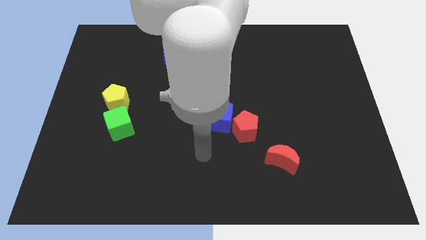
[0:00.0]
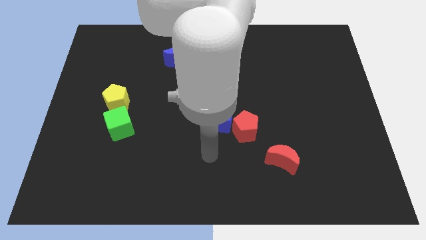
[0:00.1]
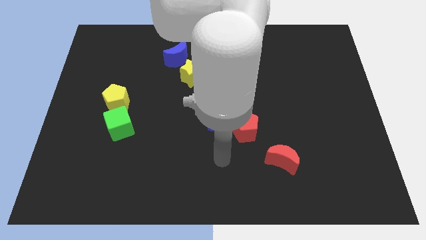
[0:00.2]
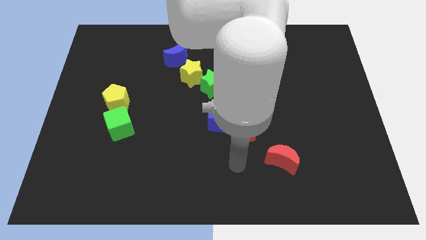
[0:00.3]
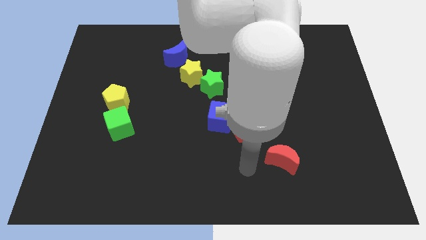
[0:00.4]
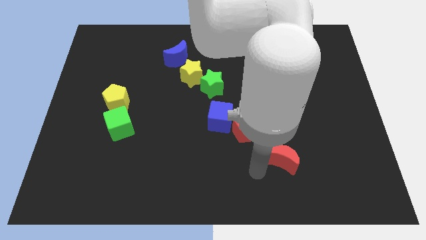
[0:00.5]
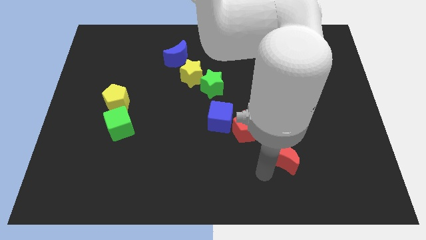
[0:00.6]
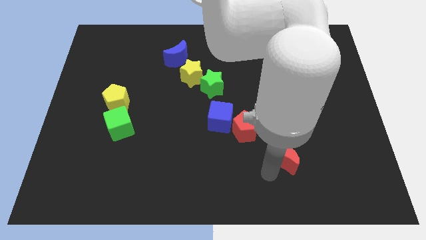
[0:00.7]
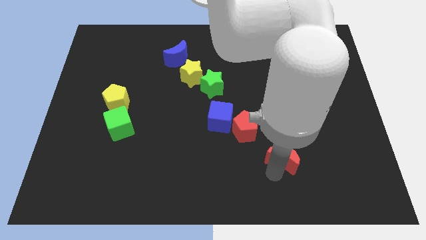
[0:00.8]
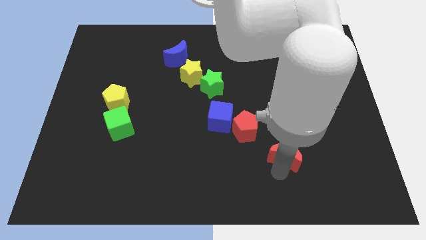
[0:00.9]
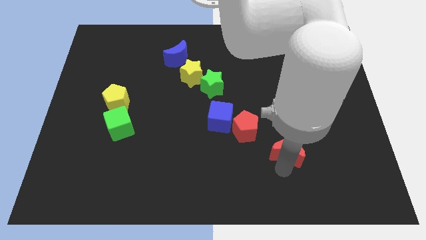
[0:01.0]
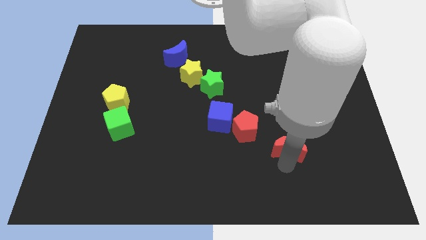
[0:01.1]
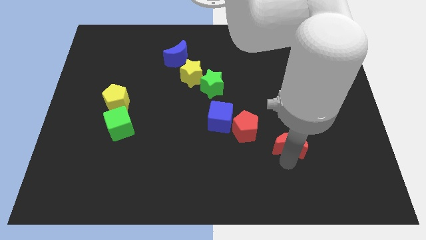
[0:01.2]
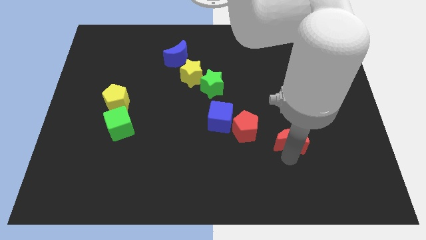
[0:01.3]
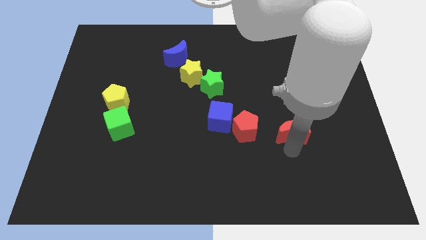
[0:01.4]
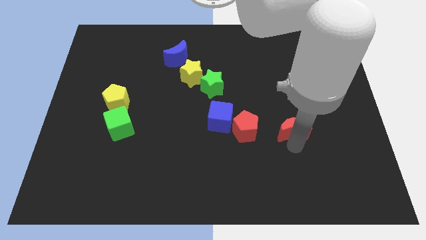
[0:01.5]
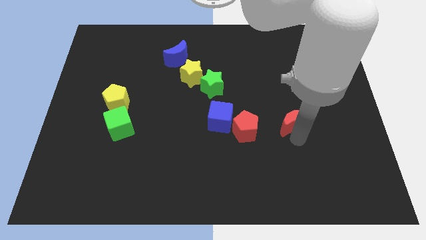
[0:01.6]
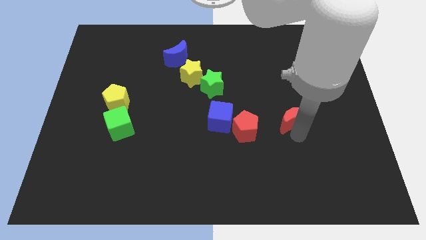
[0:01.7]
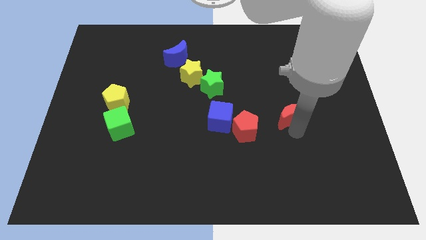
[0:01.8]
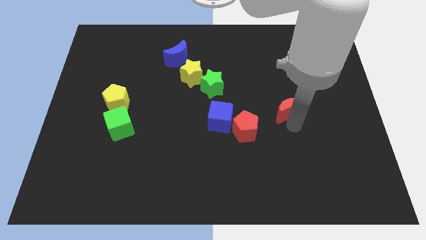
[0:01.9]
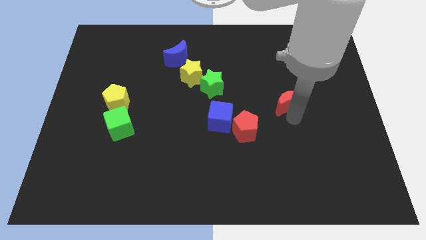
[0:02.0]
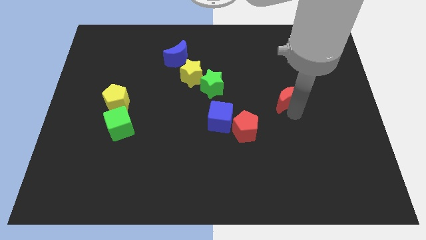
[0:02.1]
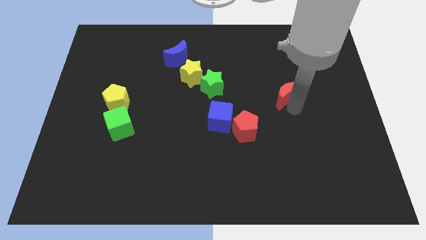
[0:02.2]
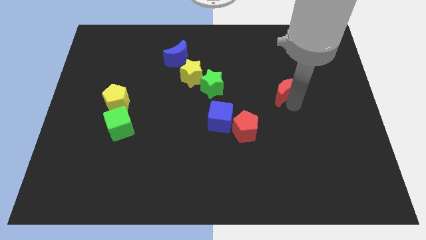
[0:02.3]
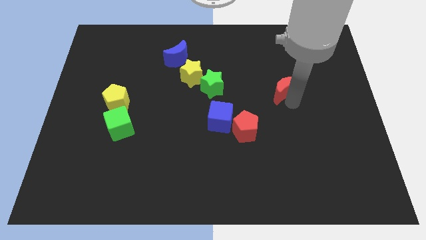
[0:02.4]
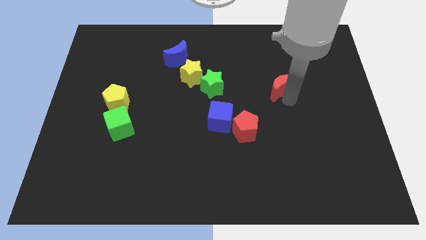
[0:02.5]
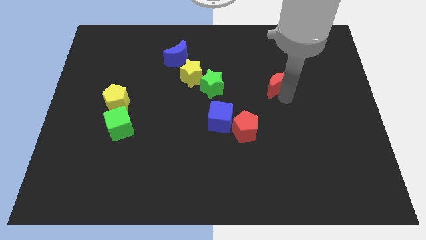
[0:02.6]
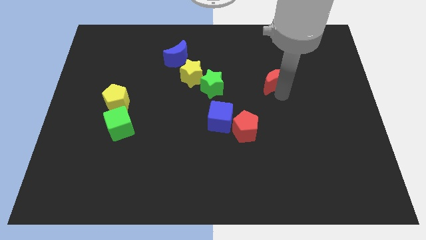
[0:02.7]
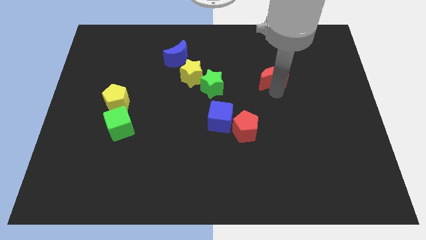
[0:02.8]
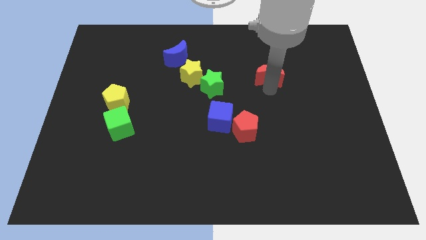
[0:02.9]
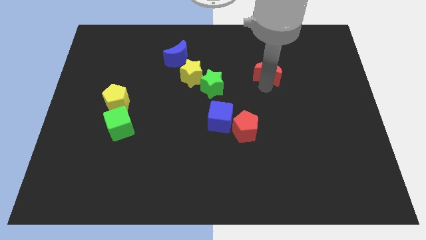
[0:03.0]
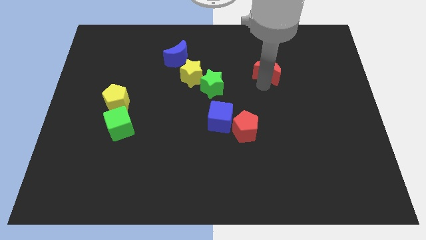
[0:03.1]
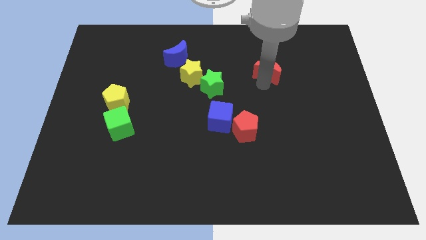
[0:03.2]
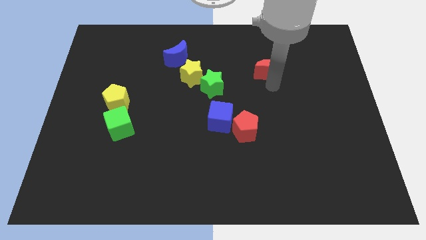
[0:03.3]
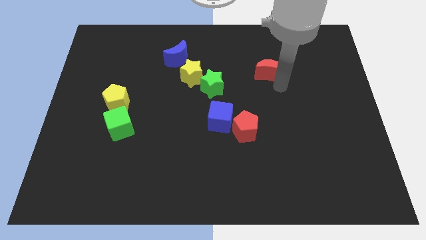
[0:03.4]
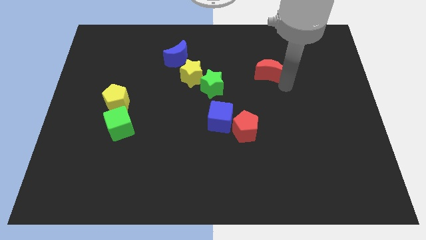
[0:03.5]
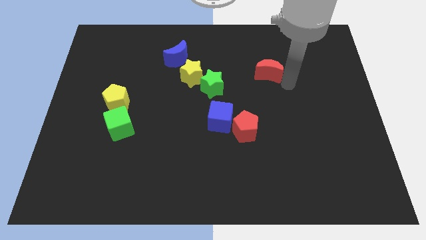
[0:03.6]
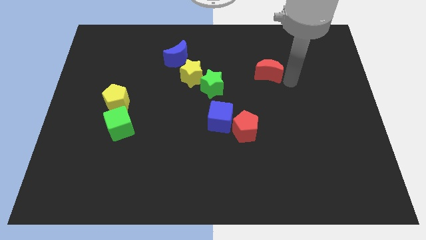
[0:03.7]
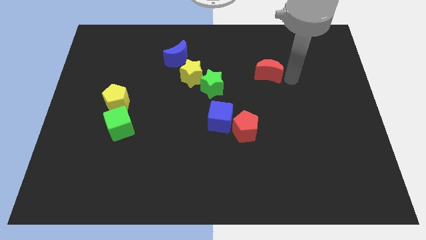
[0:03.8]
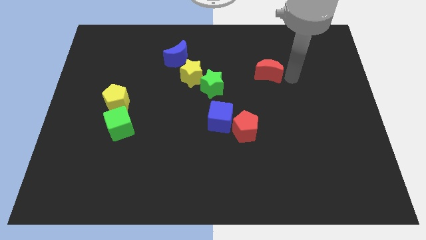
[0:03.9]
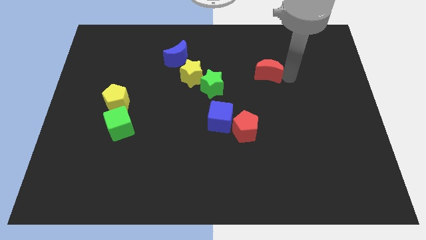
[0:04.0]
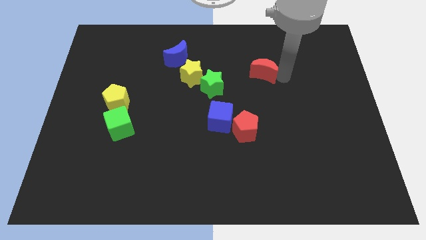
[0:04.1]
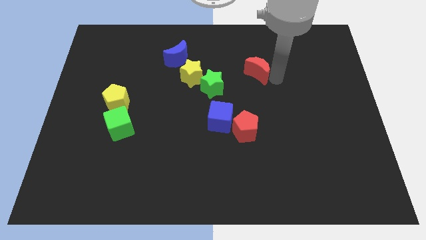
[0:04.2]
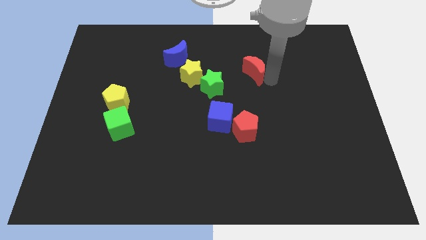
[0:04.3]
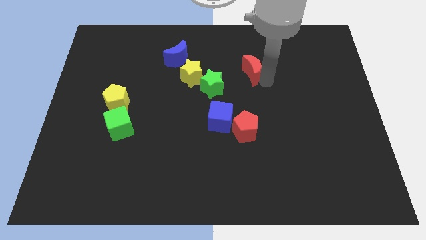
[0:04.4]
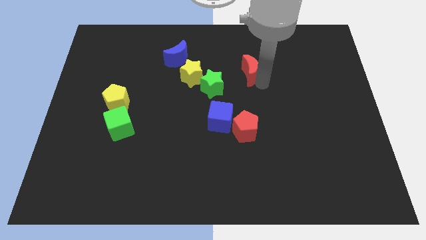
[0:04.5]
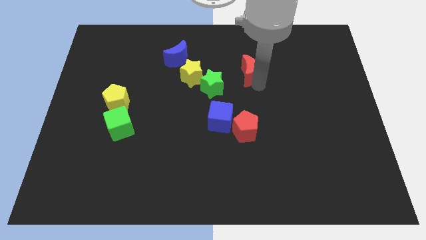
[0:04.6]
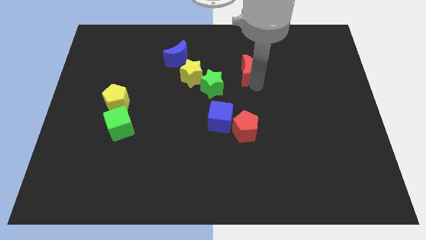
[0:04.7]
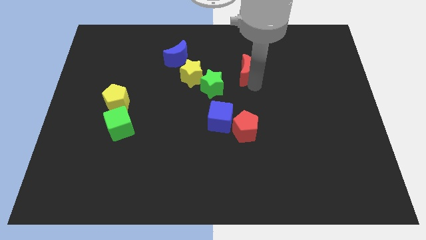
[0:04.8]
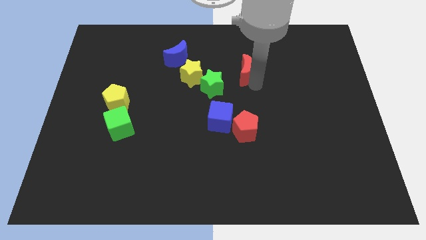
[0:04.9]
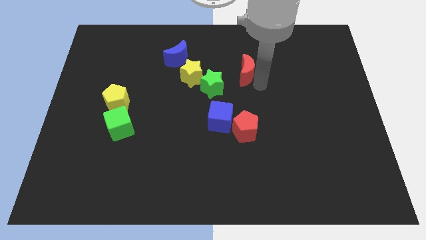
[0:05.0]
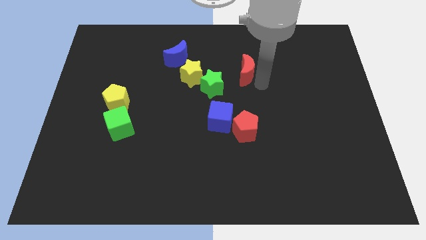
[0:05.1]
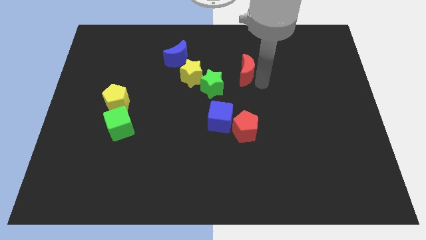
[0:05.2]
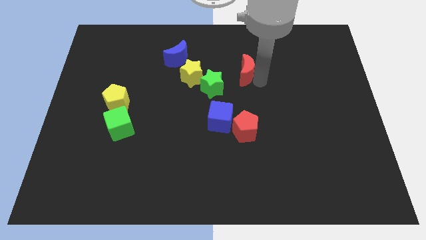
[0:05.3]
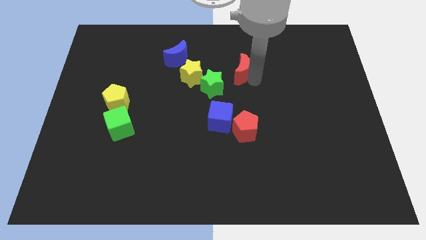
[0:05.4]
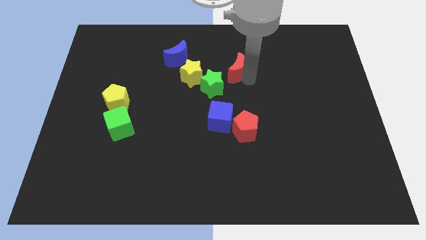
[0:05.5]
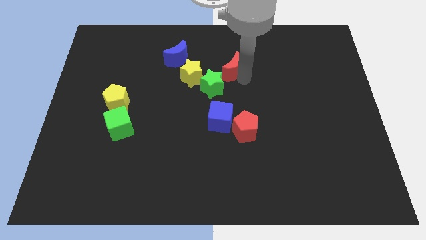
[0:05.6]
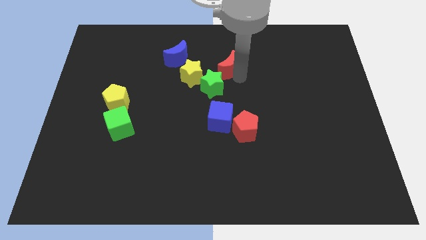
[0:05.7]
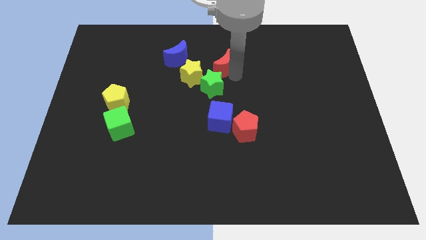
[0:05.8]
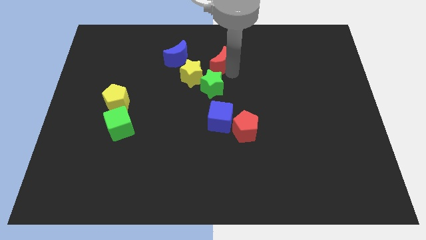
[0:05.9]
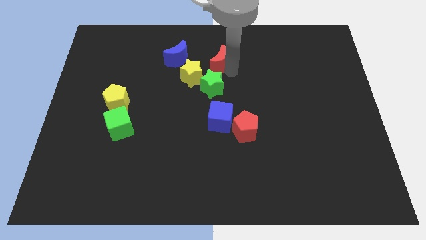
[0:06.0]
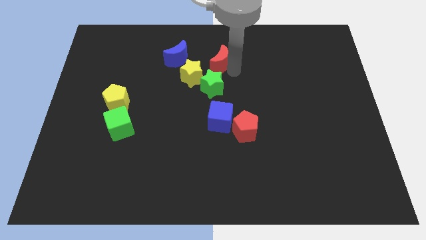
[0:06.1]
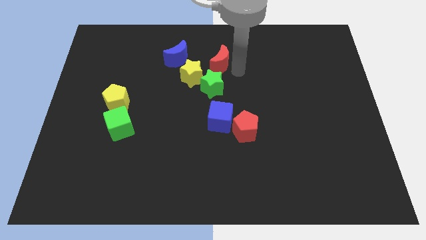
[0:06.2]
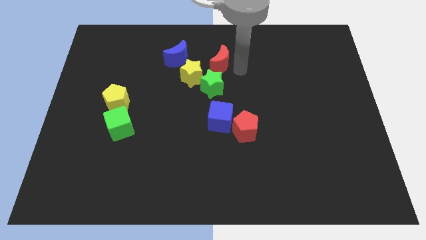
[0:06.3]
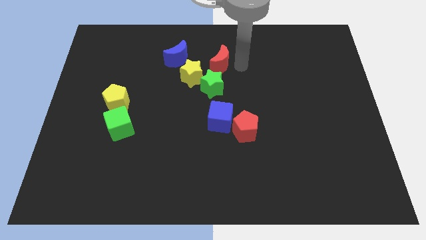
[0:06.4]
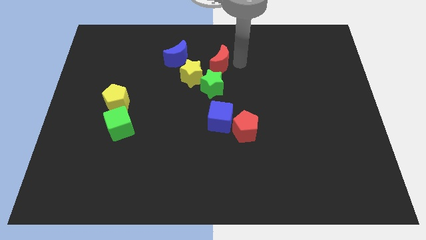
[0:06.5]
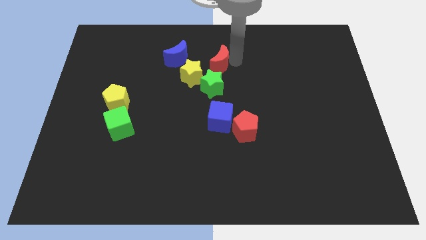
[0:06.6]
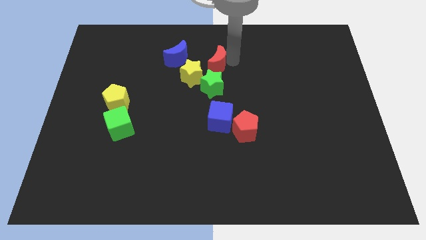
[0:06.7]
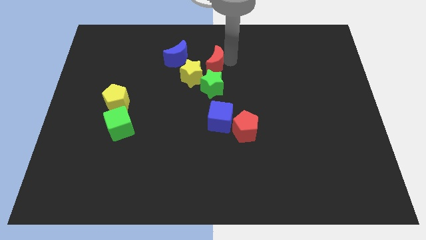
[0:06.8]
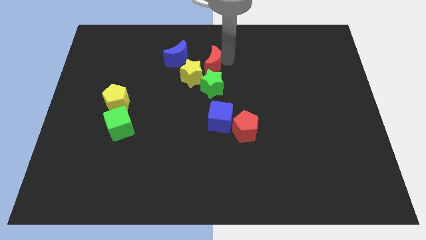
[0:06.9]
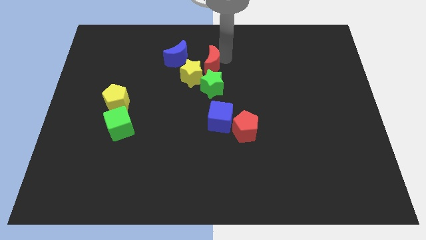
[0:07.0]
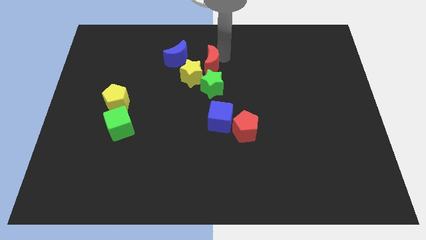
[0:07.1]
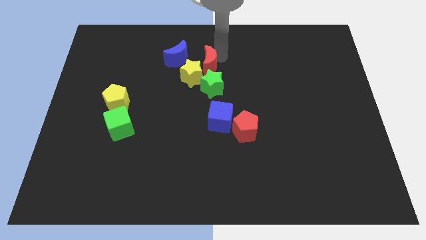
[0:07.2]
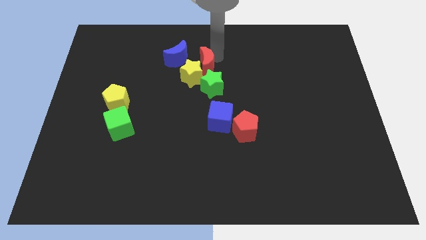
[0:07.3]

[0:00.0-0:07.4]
push the red moon next to the yellow star

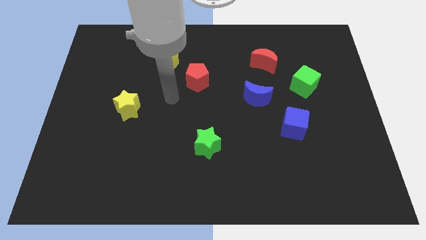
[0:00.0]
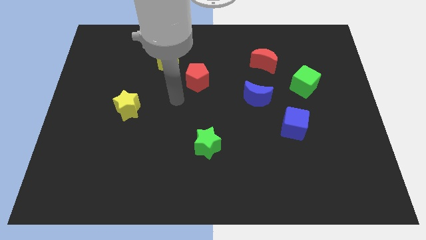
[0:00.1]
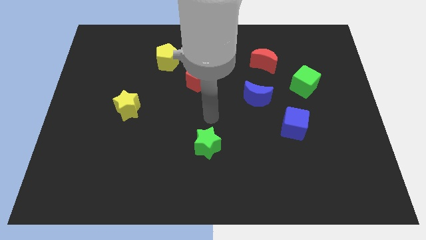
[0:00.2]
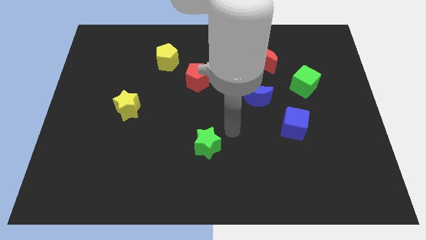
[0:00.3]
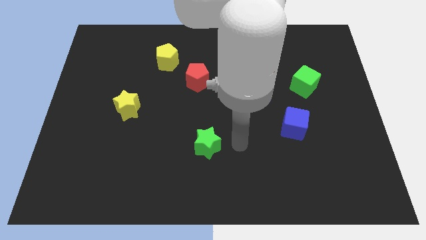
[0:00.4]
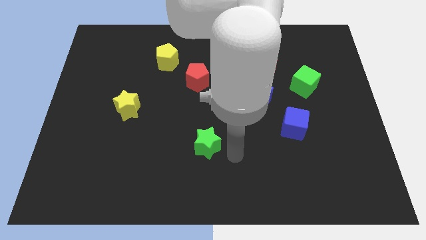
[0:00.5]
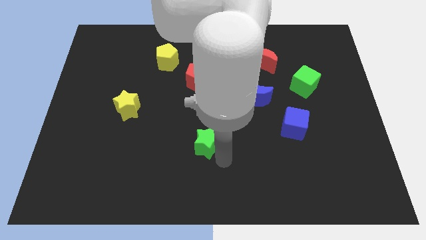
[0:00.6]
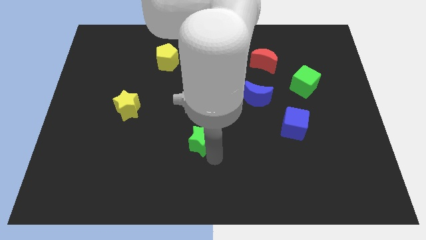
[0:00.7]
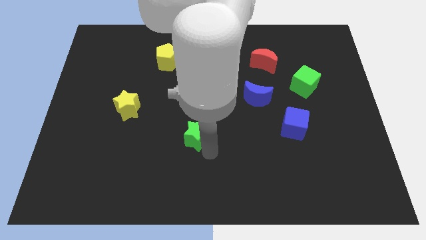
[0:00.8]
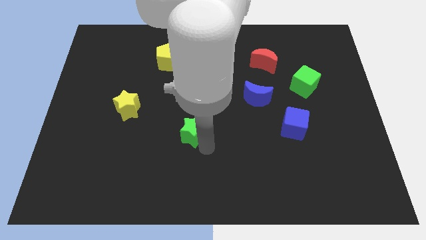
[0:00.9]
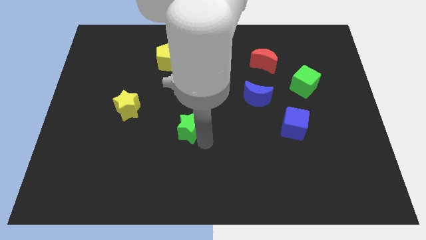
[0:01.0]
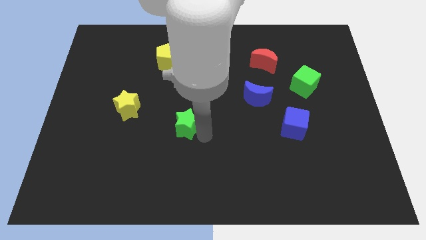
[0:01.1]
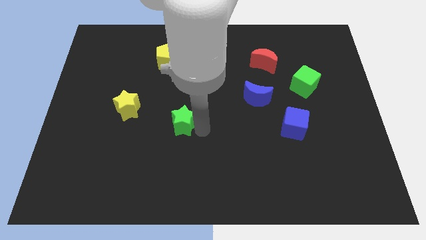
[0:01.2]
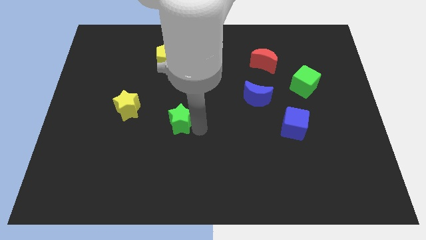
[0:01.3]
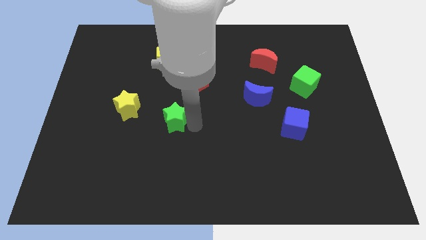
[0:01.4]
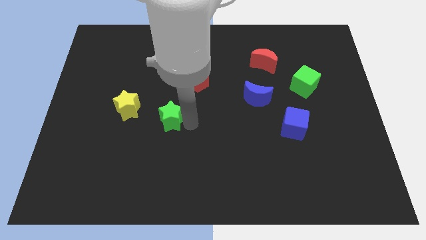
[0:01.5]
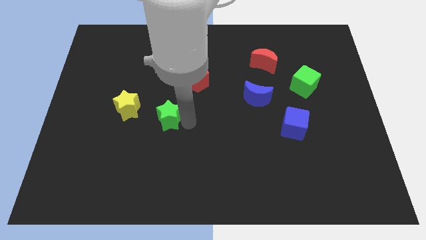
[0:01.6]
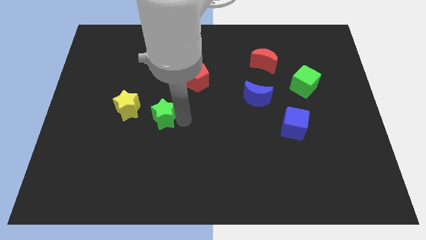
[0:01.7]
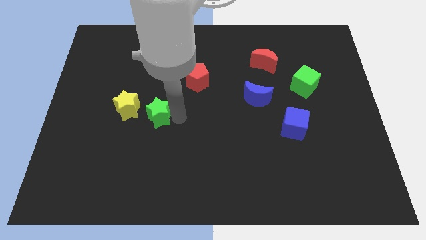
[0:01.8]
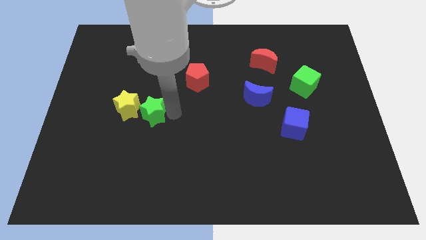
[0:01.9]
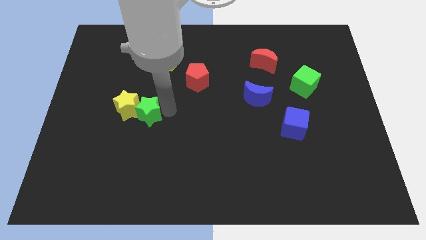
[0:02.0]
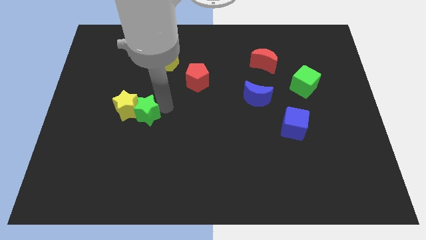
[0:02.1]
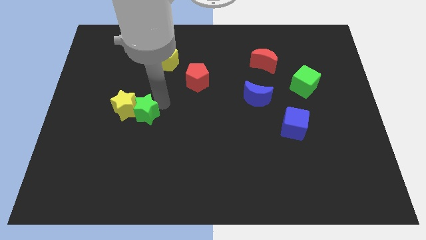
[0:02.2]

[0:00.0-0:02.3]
put the green star to the yellow star
